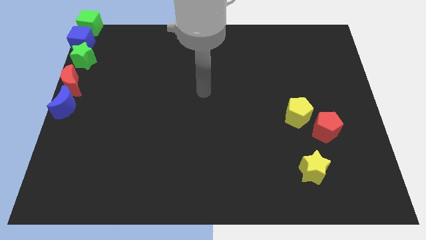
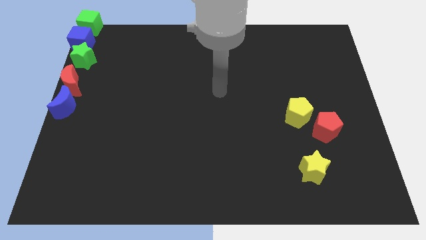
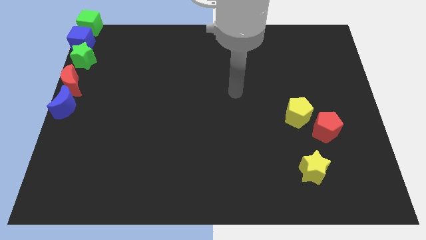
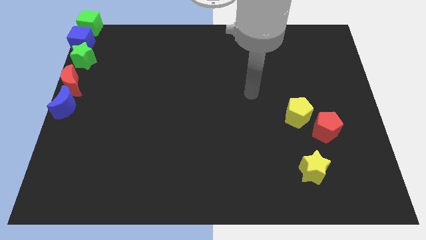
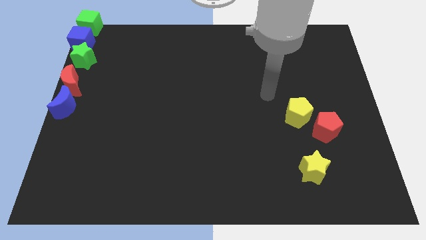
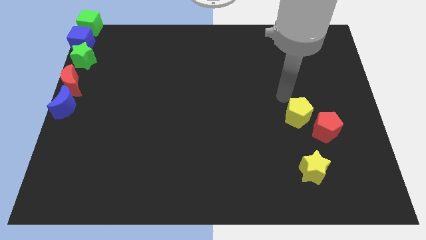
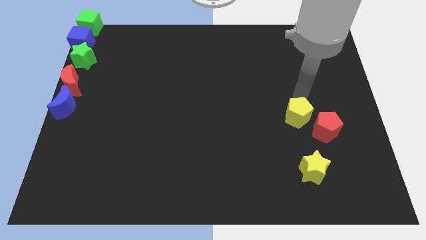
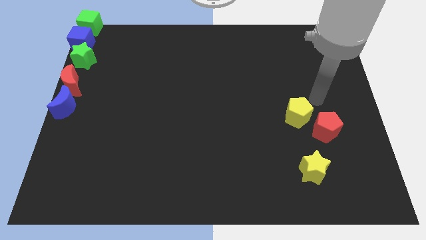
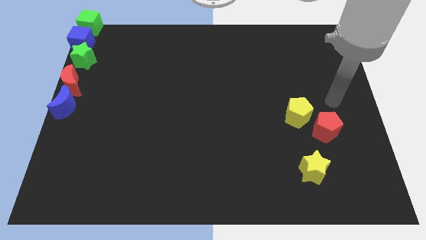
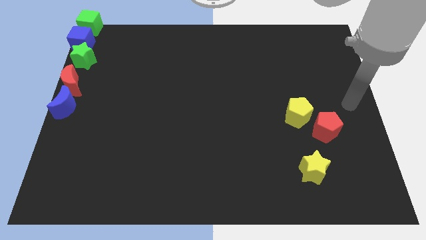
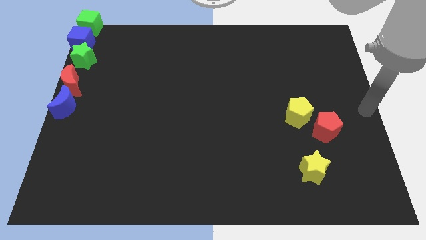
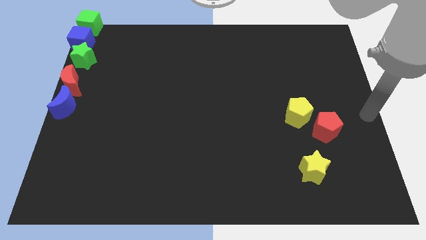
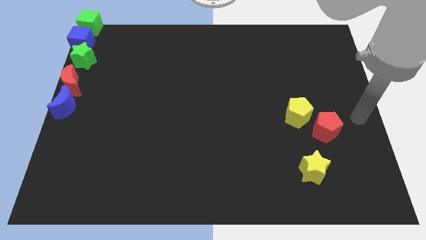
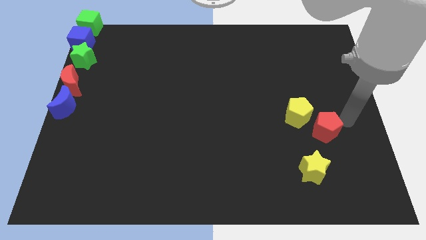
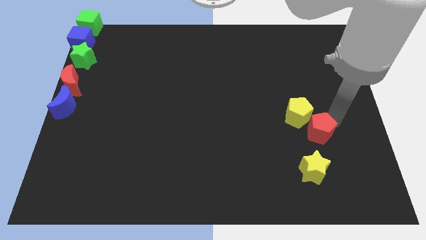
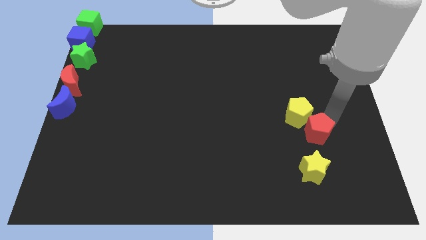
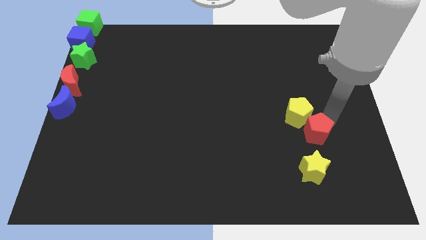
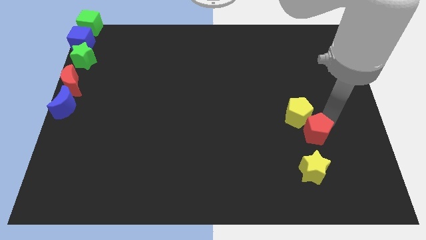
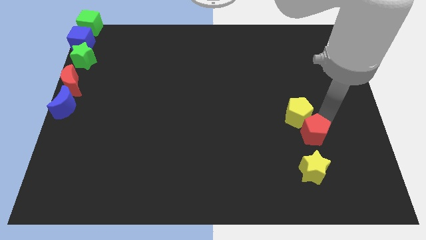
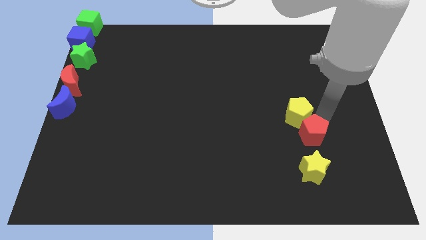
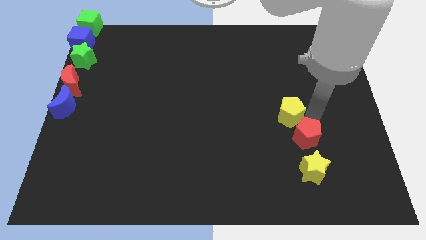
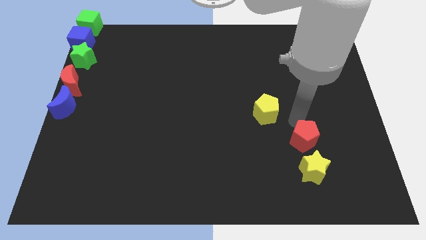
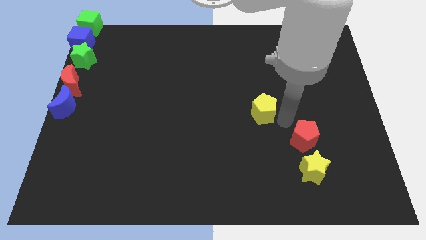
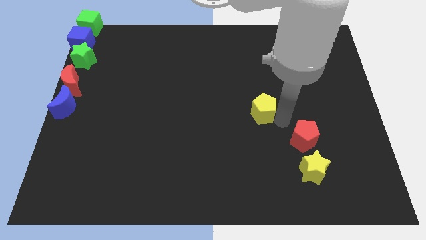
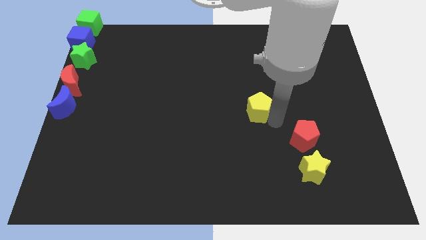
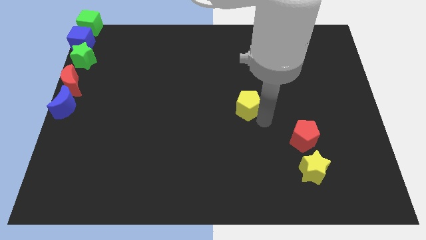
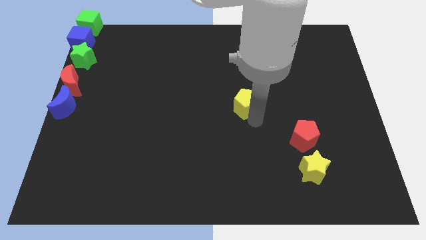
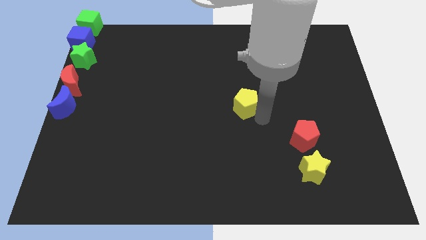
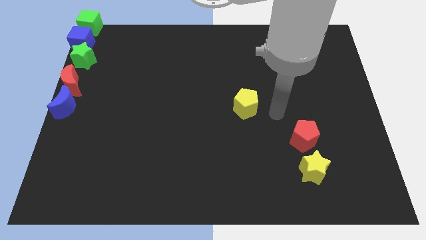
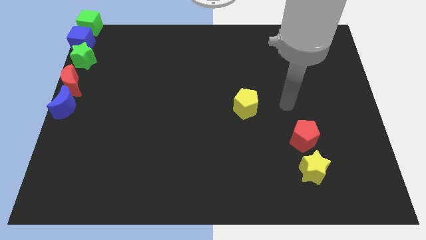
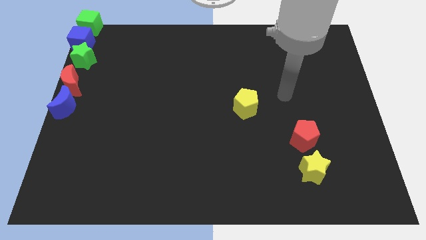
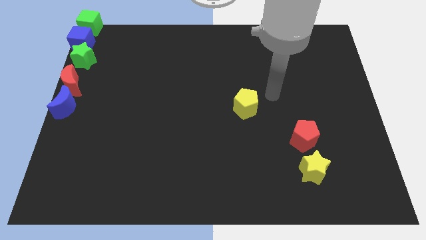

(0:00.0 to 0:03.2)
separate the yellow pentagon and red pentagon

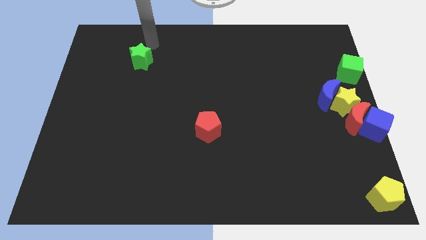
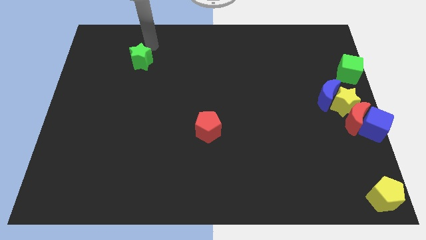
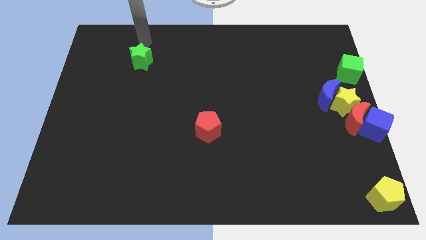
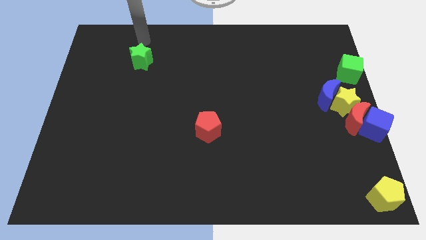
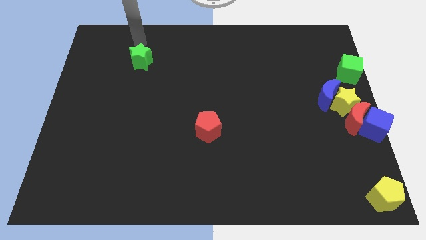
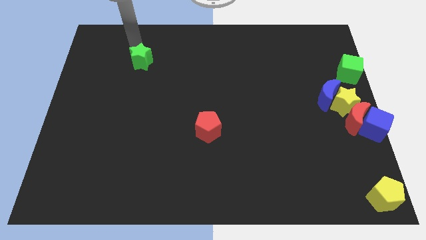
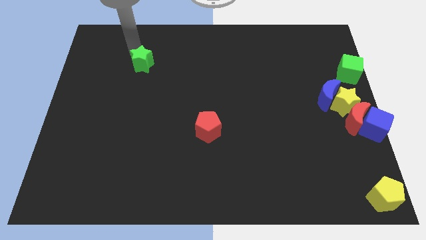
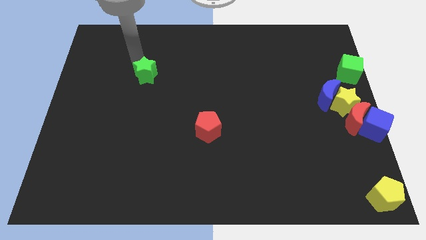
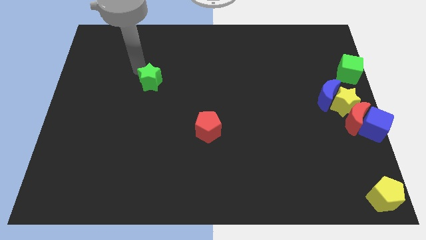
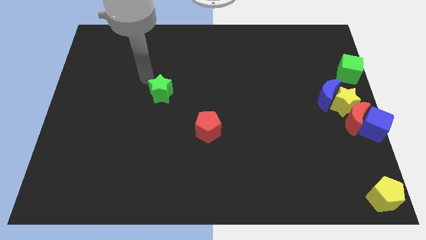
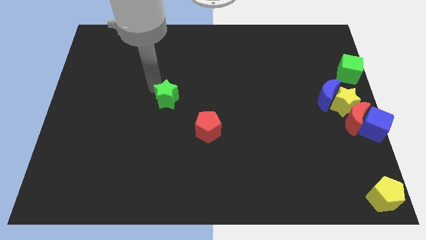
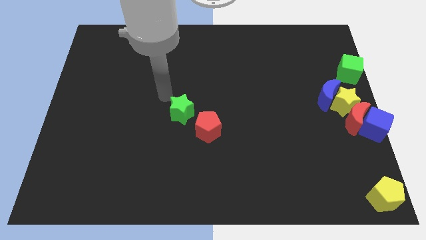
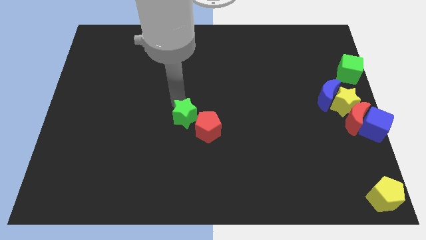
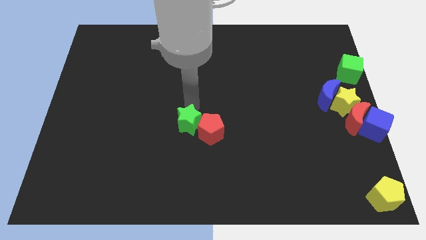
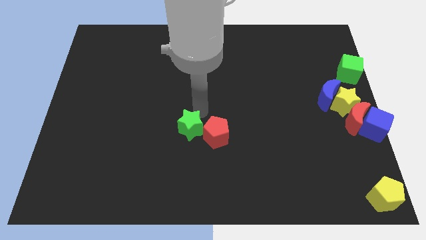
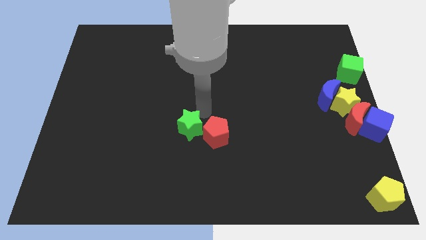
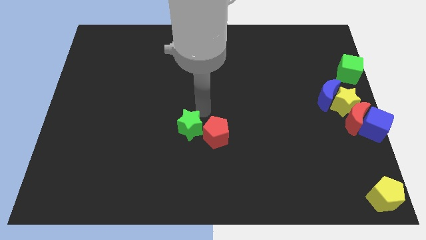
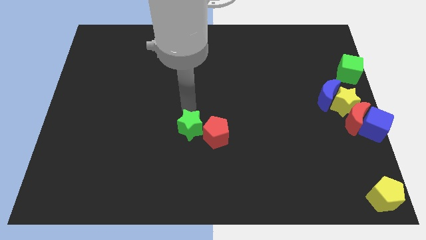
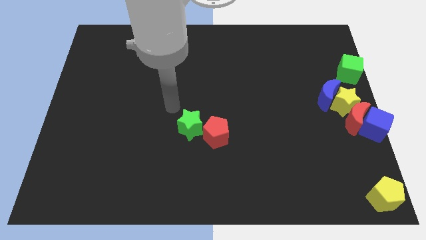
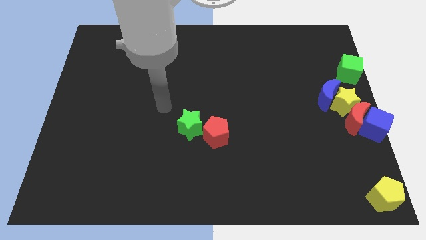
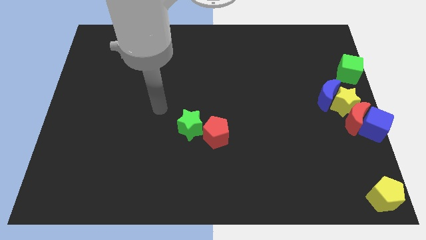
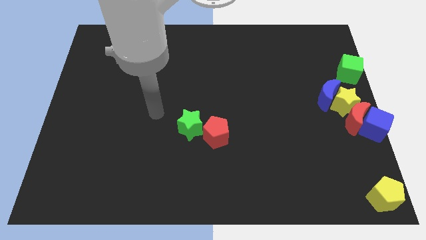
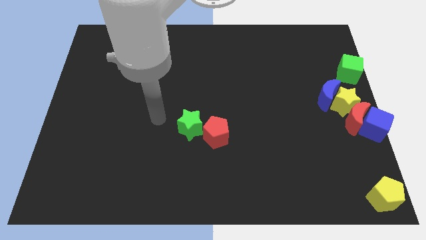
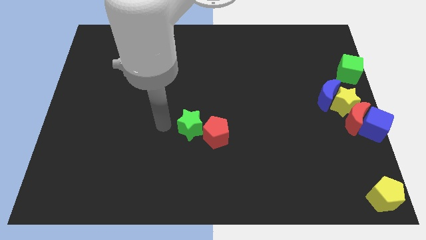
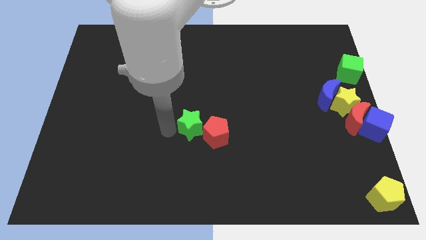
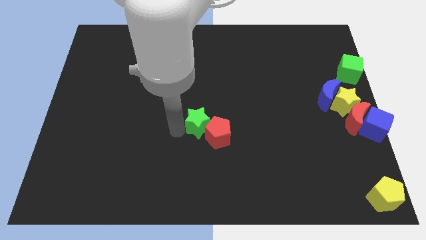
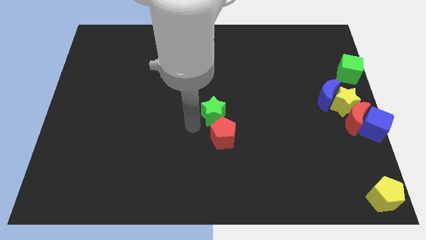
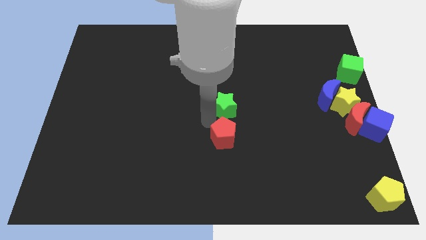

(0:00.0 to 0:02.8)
push the green star to the top of red pentagon

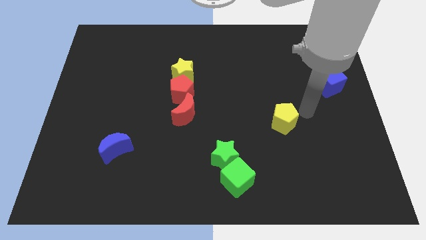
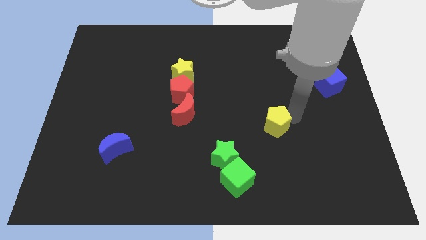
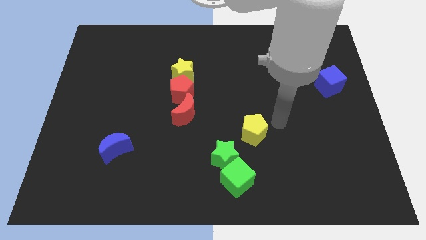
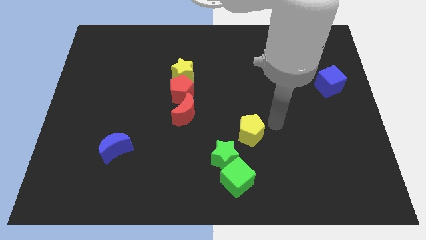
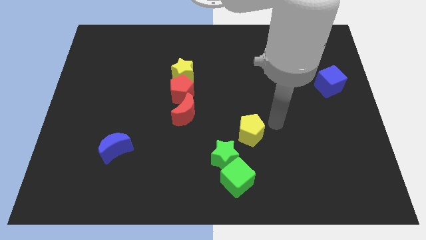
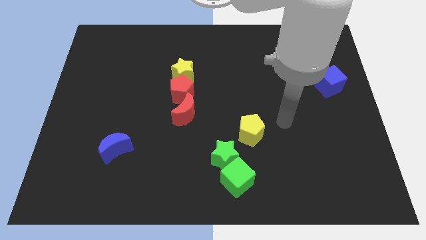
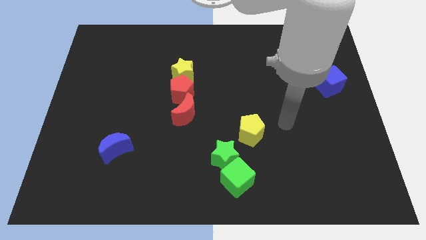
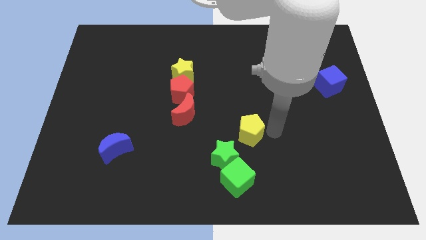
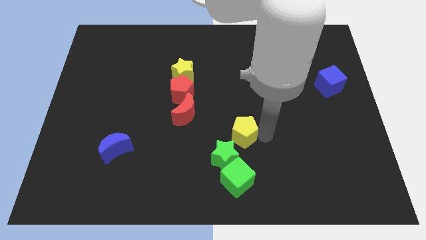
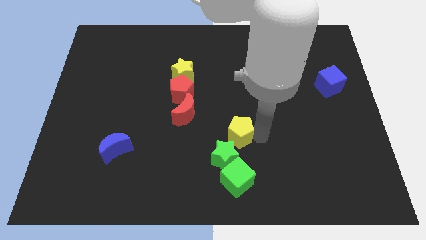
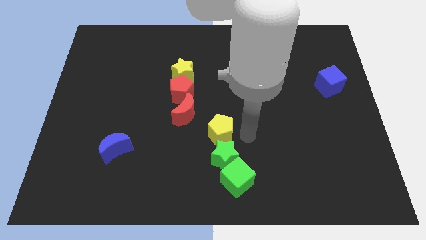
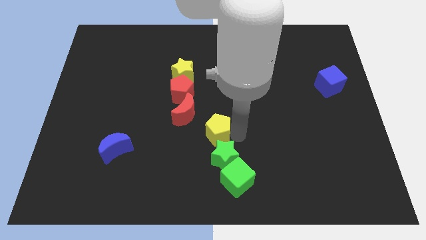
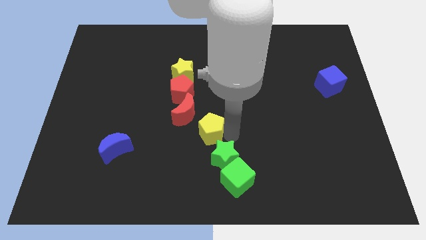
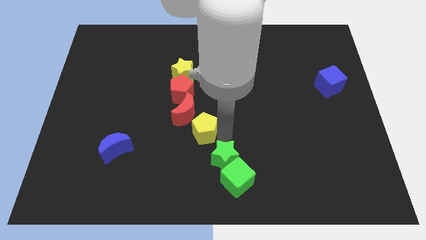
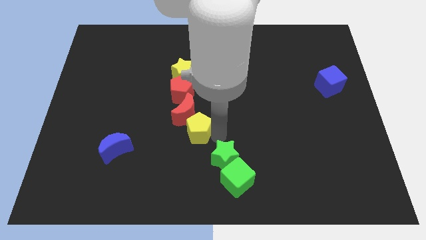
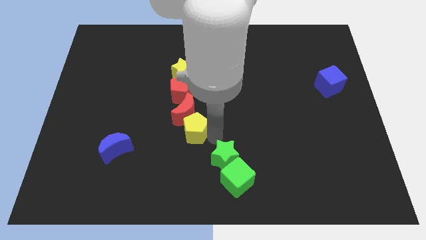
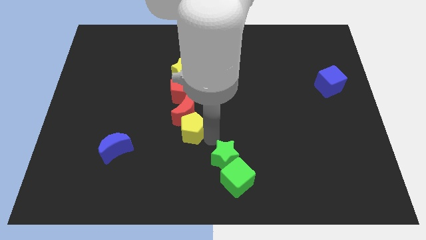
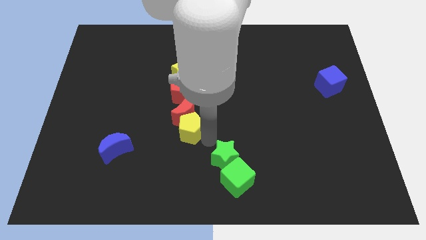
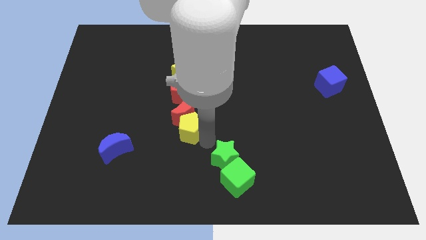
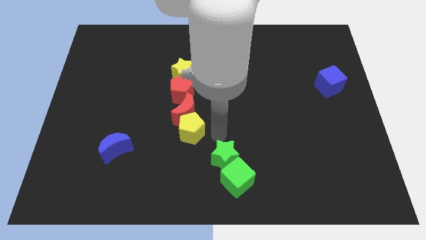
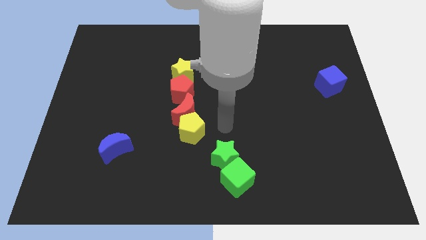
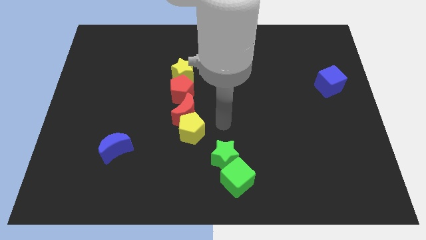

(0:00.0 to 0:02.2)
slide yellow pentagon into red moon

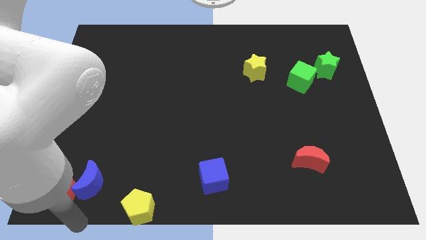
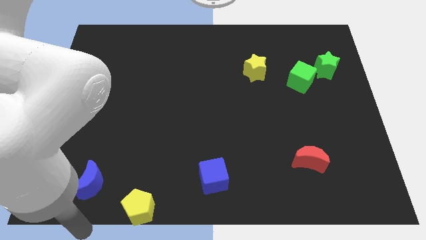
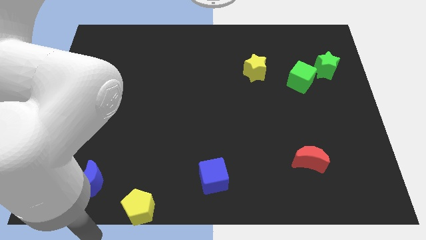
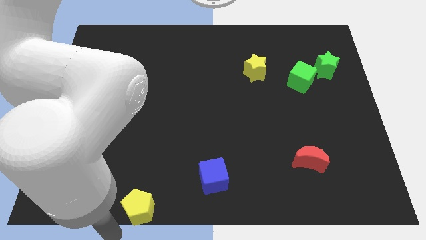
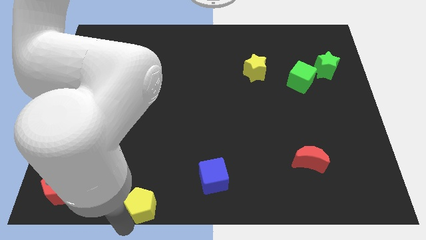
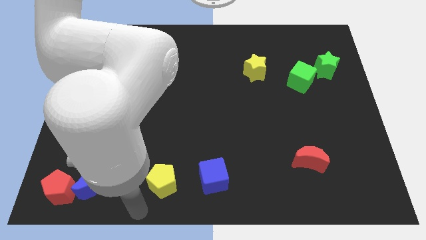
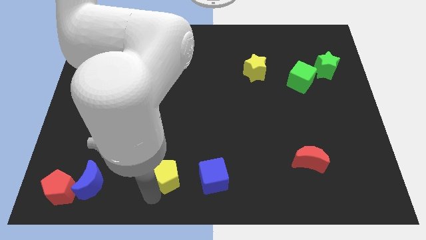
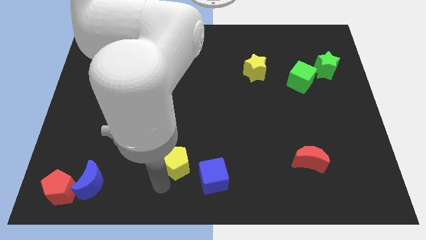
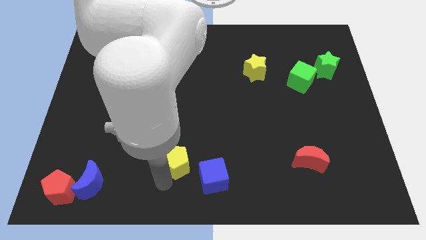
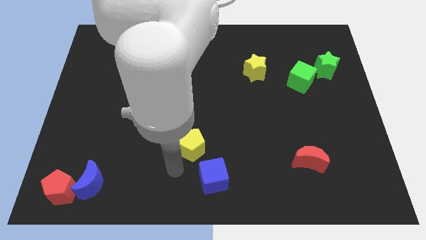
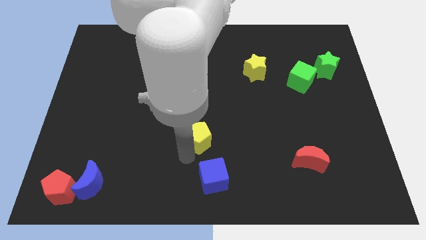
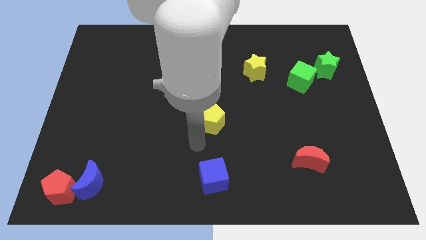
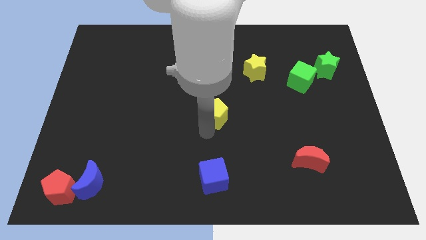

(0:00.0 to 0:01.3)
place the yellow pentagon above the blue cube
